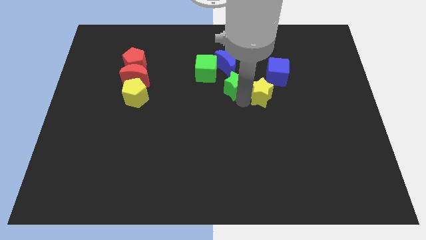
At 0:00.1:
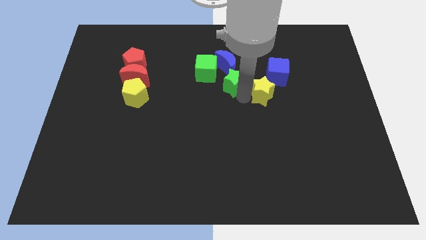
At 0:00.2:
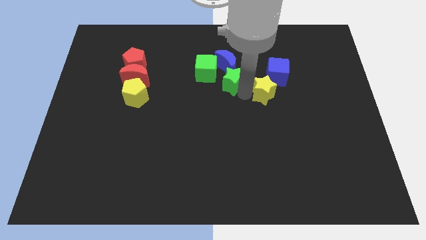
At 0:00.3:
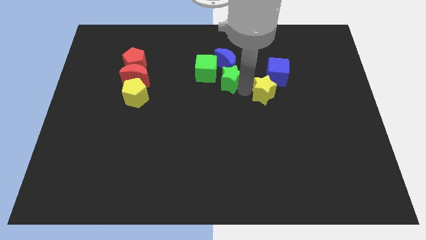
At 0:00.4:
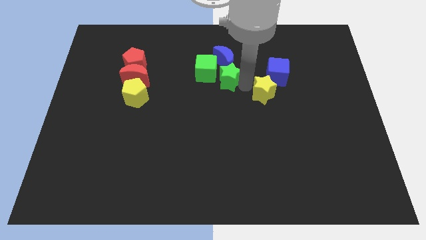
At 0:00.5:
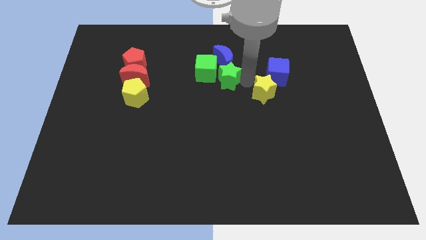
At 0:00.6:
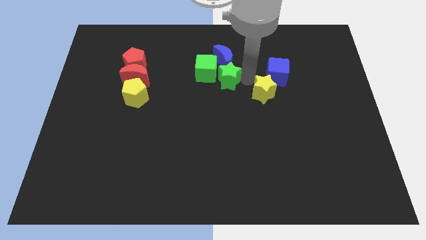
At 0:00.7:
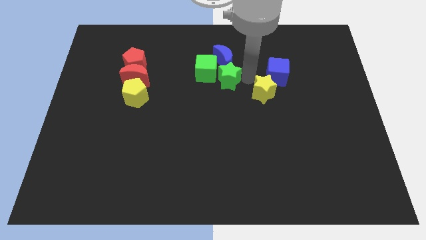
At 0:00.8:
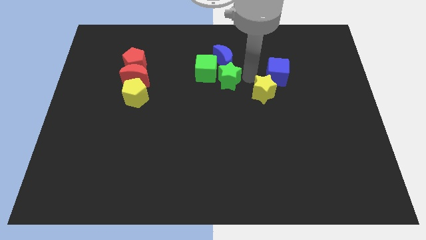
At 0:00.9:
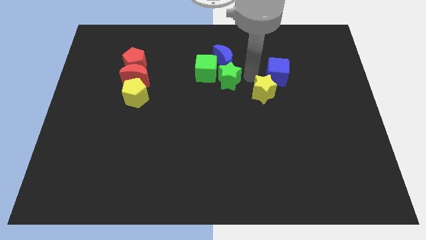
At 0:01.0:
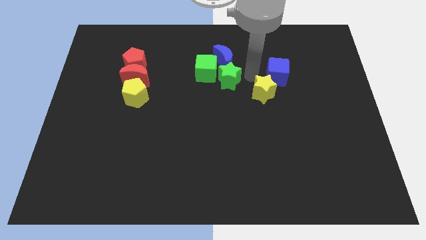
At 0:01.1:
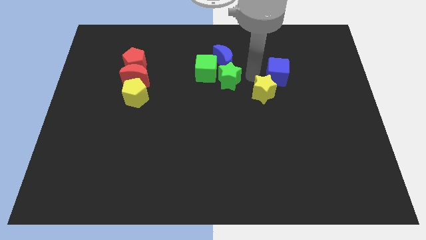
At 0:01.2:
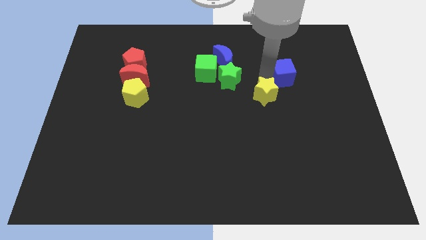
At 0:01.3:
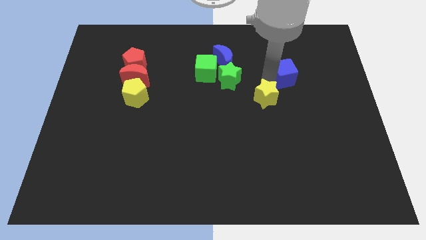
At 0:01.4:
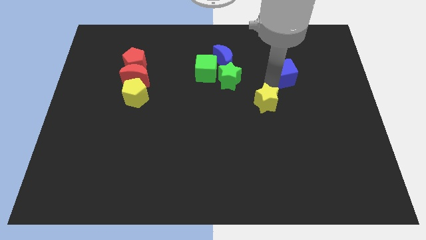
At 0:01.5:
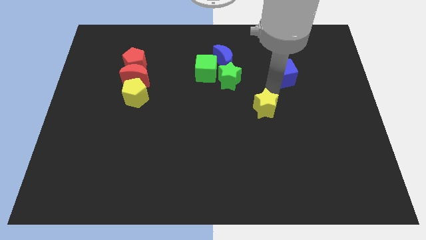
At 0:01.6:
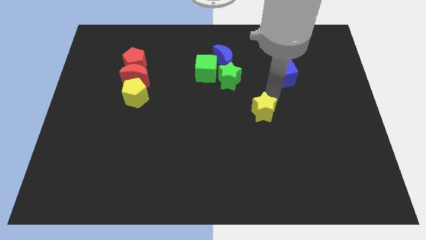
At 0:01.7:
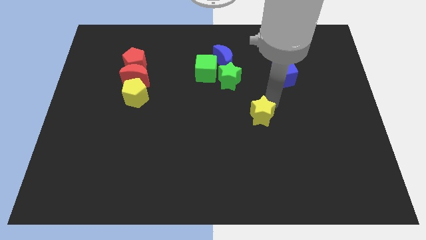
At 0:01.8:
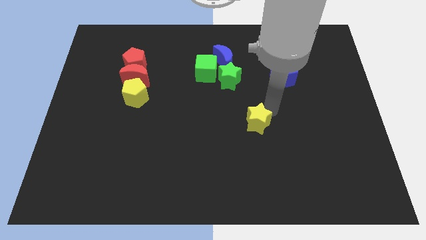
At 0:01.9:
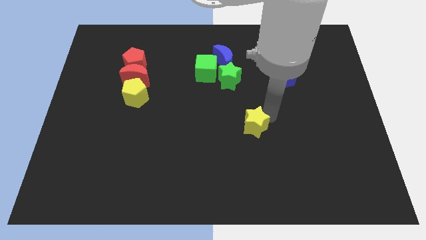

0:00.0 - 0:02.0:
push the yellow star slightly downwards

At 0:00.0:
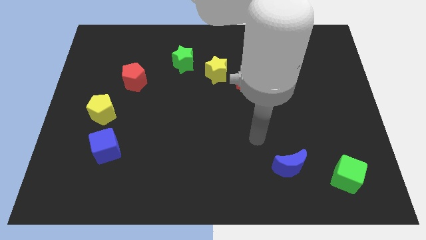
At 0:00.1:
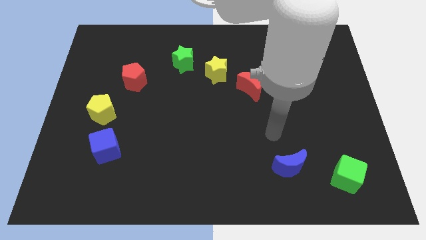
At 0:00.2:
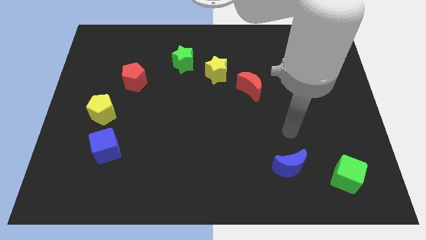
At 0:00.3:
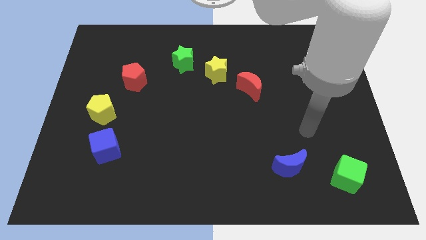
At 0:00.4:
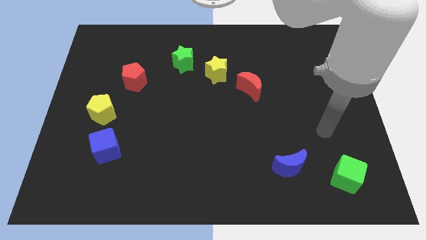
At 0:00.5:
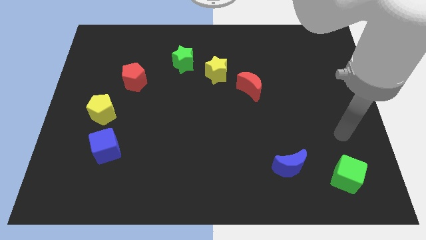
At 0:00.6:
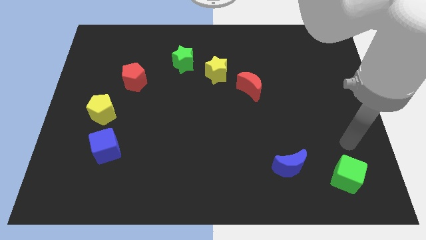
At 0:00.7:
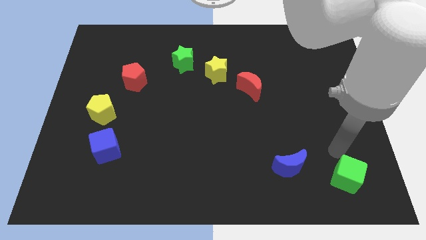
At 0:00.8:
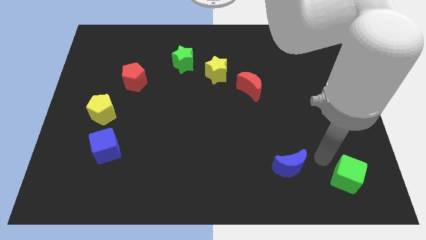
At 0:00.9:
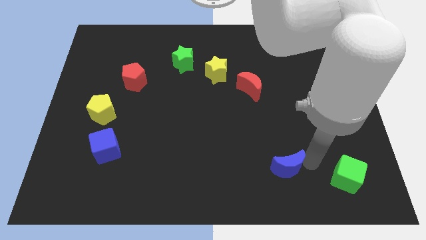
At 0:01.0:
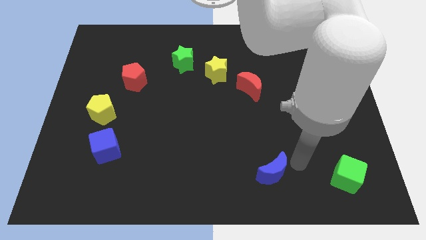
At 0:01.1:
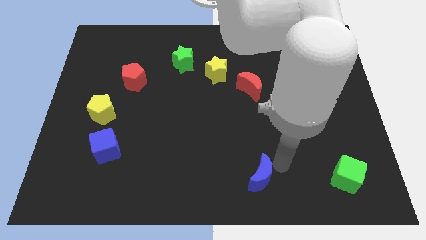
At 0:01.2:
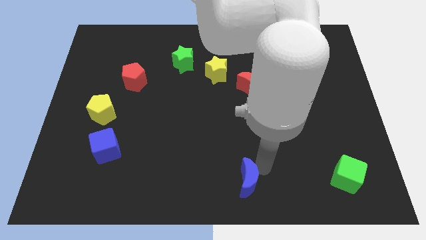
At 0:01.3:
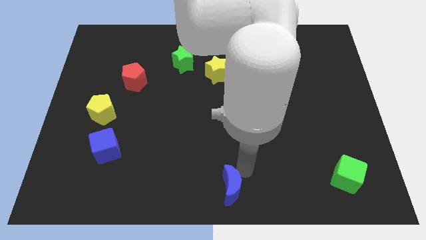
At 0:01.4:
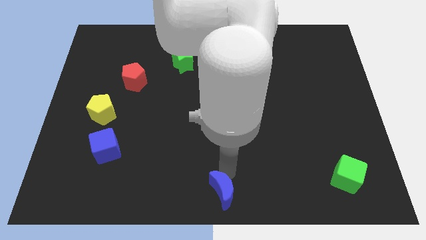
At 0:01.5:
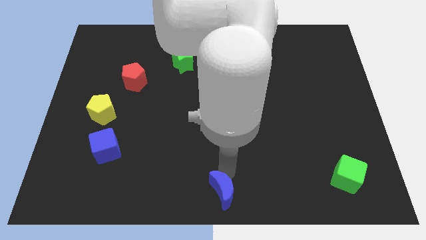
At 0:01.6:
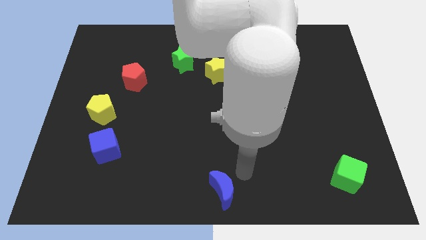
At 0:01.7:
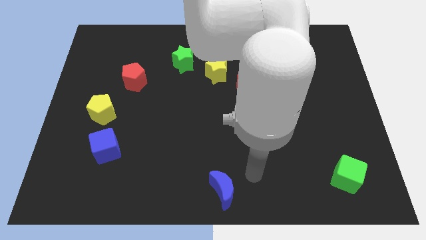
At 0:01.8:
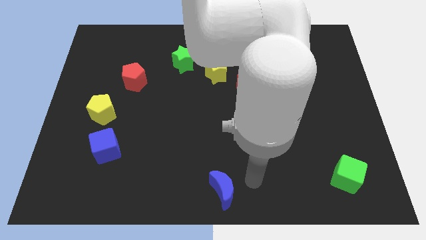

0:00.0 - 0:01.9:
place the blue crescent at bottom center of the board

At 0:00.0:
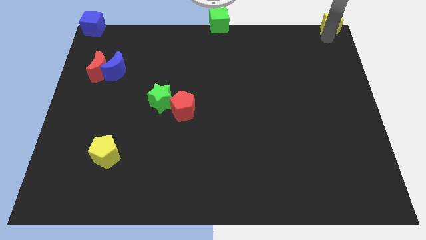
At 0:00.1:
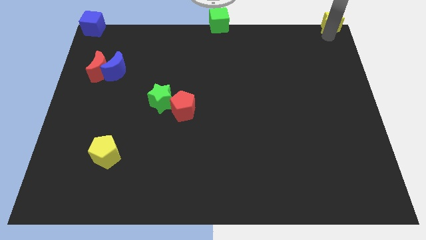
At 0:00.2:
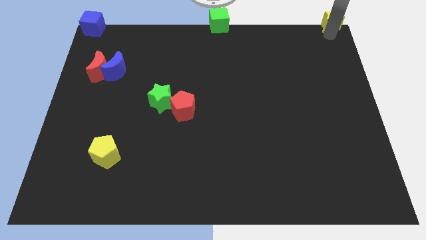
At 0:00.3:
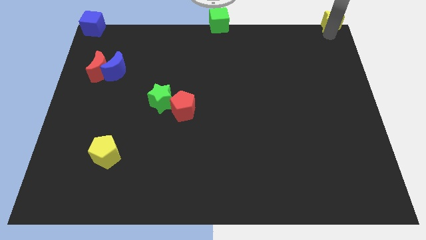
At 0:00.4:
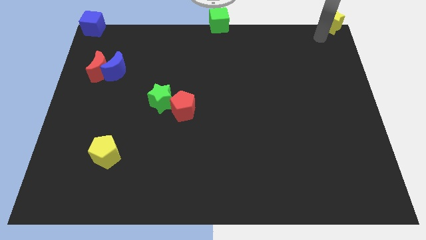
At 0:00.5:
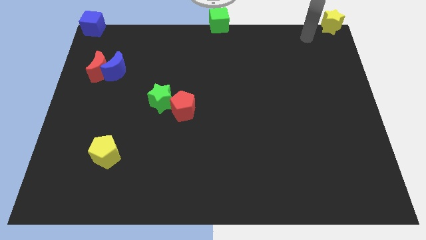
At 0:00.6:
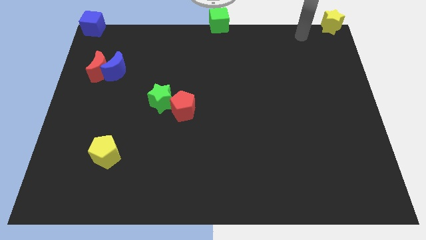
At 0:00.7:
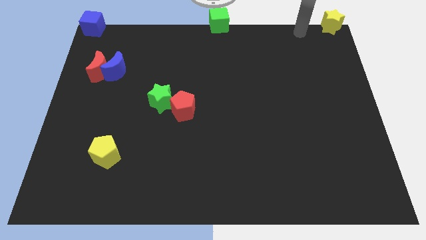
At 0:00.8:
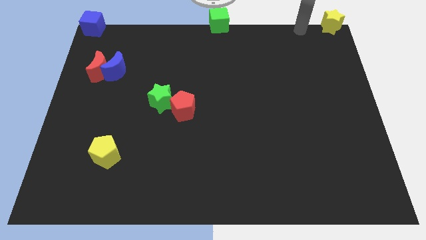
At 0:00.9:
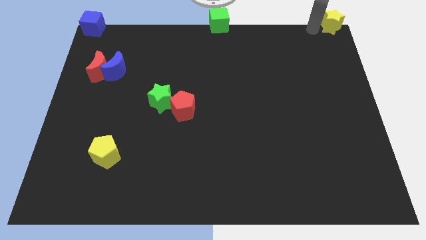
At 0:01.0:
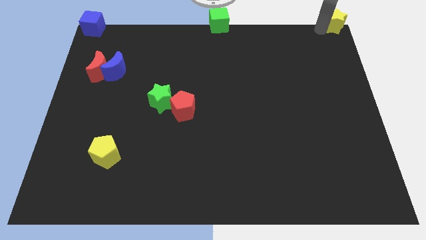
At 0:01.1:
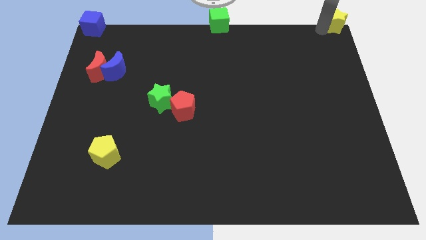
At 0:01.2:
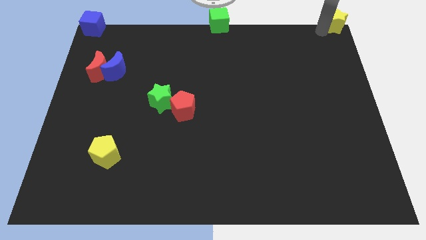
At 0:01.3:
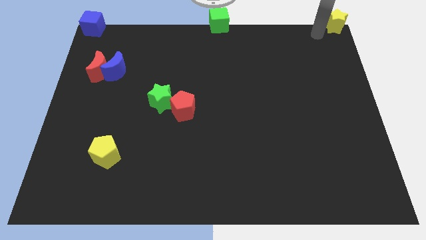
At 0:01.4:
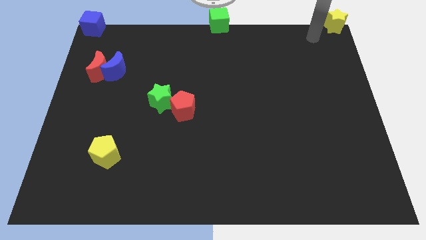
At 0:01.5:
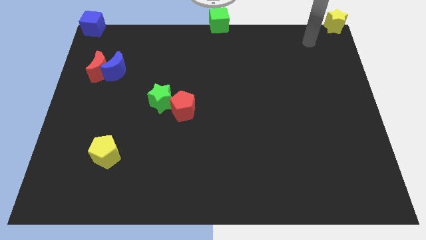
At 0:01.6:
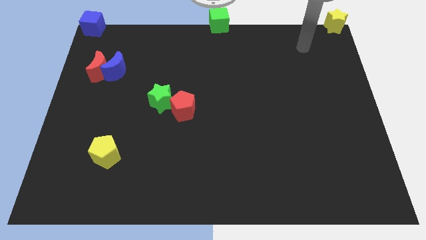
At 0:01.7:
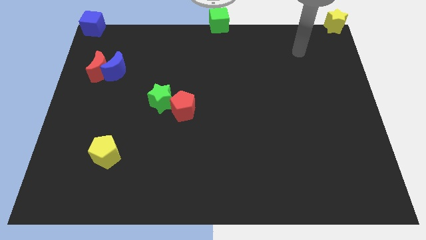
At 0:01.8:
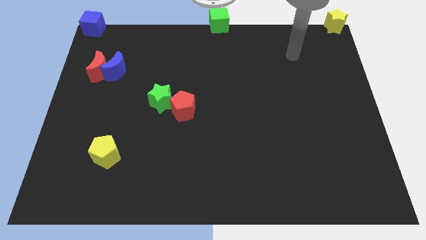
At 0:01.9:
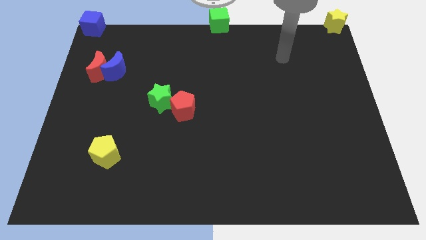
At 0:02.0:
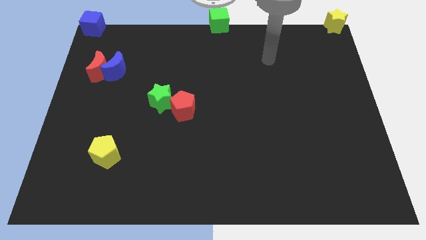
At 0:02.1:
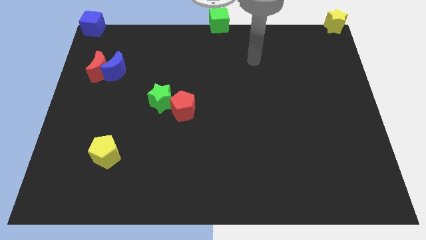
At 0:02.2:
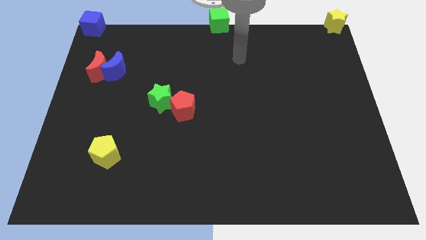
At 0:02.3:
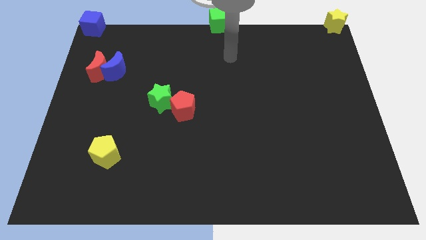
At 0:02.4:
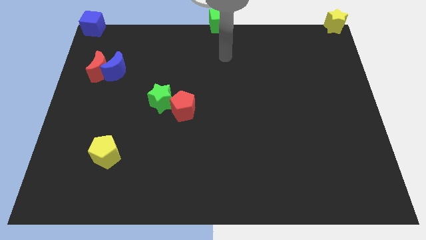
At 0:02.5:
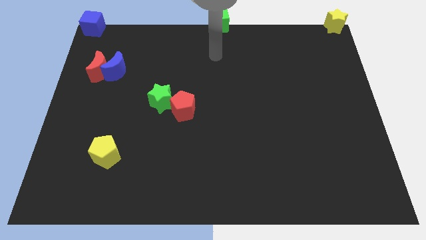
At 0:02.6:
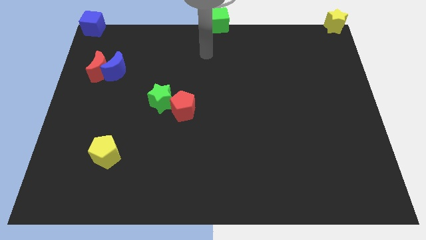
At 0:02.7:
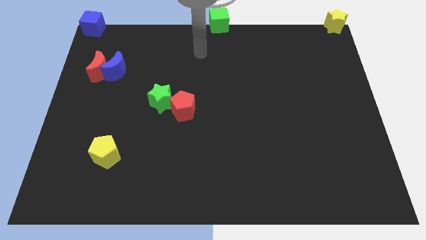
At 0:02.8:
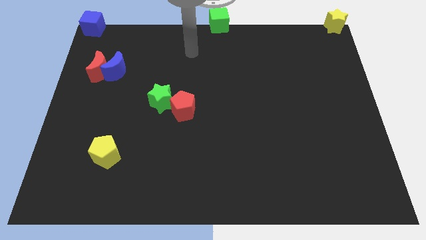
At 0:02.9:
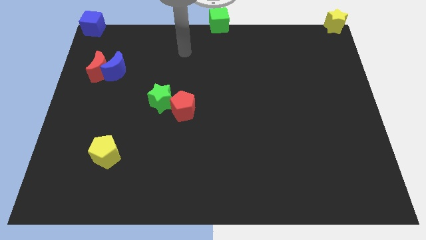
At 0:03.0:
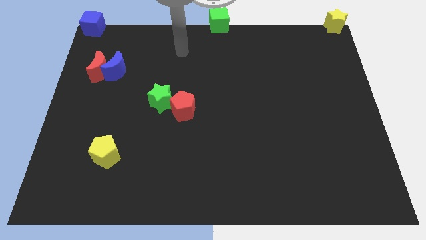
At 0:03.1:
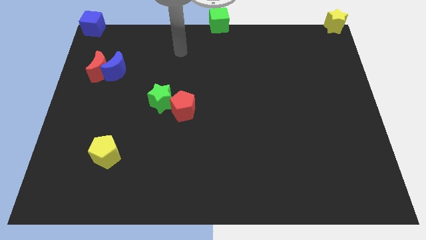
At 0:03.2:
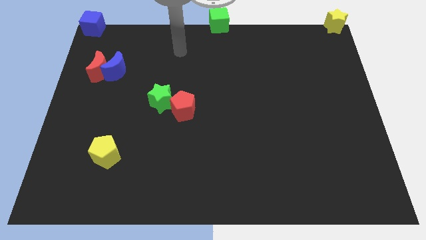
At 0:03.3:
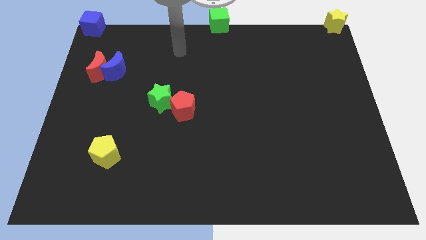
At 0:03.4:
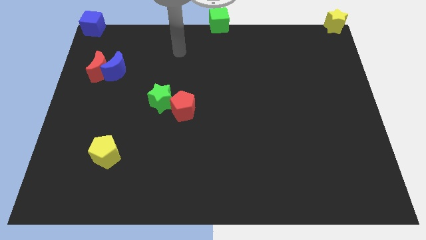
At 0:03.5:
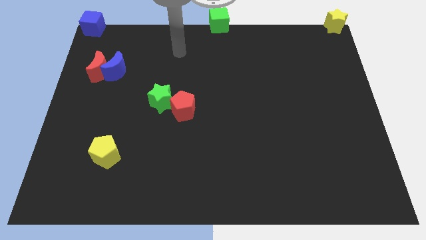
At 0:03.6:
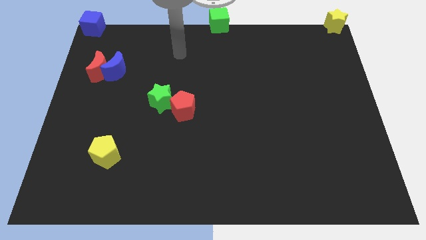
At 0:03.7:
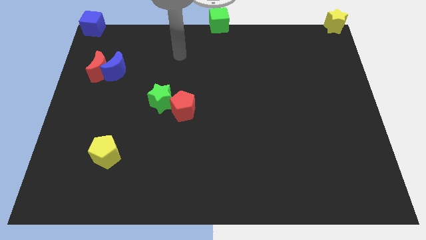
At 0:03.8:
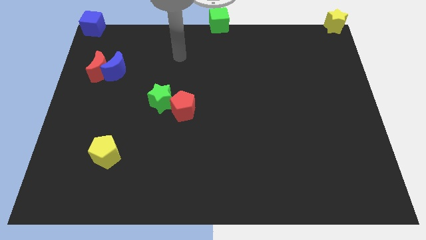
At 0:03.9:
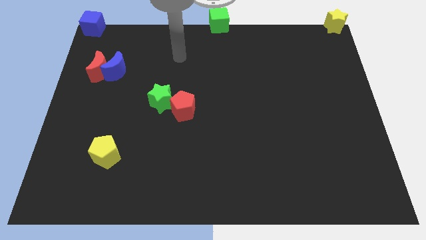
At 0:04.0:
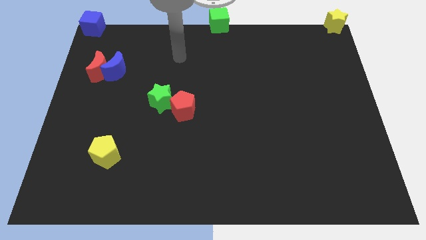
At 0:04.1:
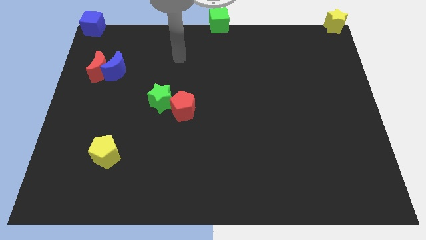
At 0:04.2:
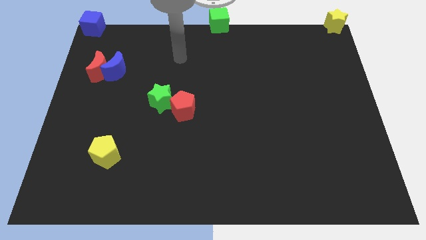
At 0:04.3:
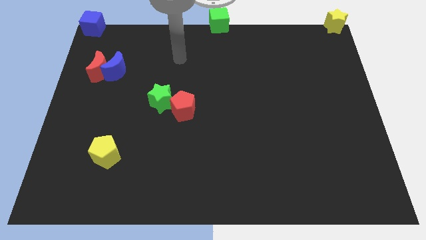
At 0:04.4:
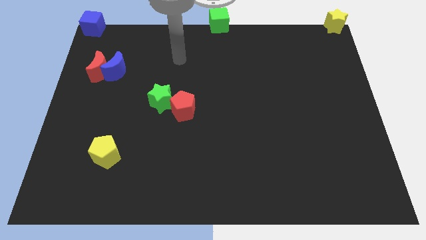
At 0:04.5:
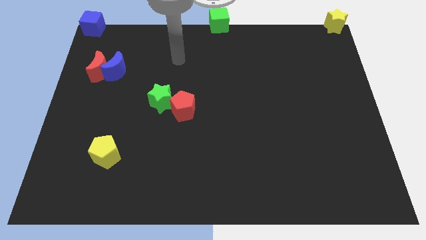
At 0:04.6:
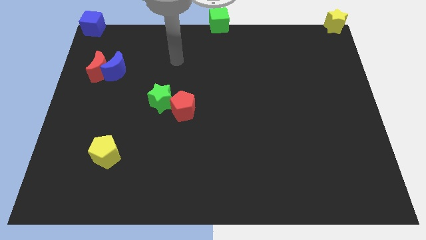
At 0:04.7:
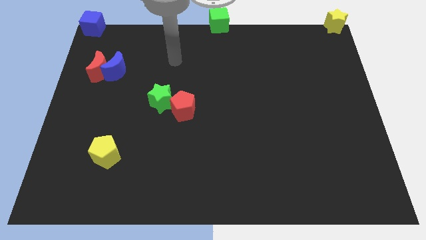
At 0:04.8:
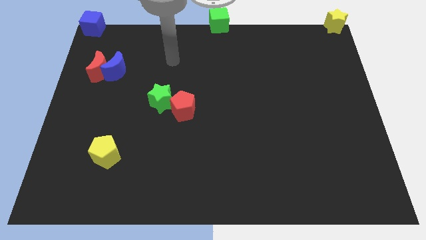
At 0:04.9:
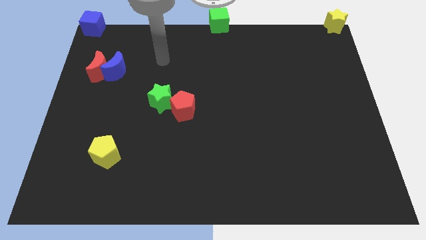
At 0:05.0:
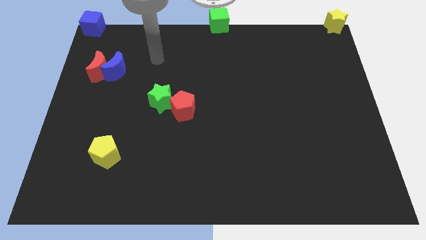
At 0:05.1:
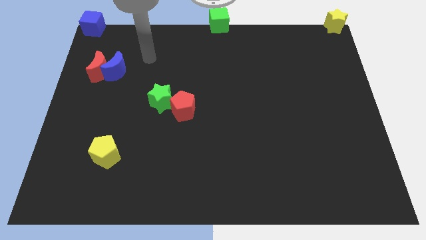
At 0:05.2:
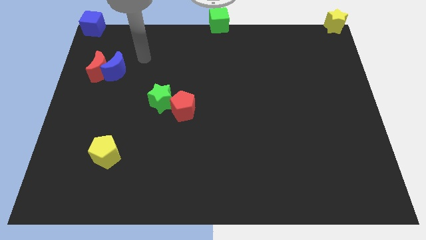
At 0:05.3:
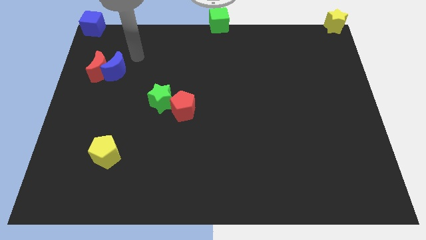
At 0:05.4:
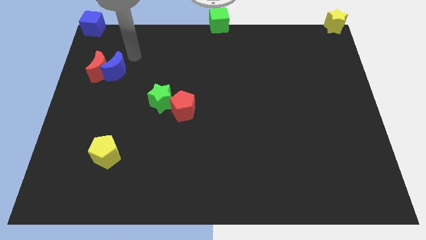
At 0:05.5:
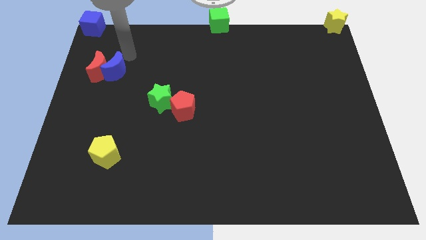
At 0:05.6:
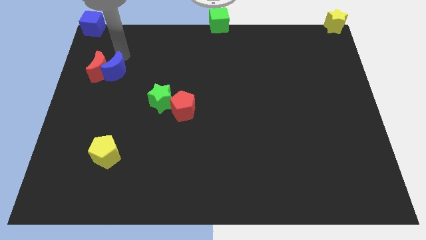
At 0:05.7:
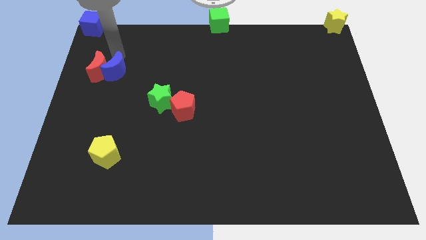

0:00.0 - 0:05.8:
place the arm at the top of blue moon
